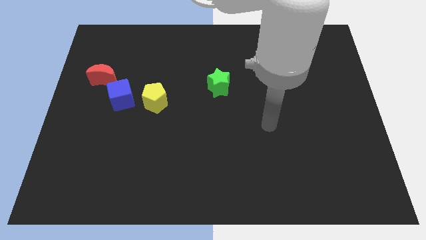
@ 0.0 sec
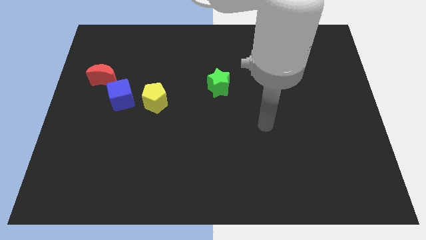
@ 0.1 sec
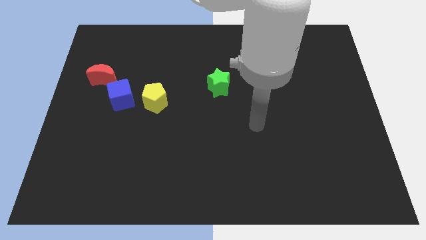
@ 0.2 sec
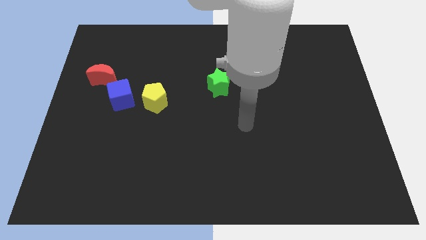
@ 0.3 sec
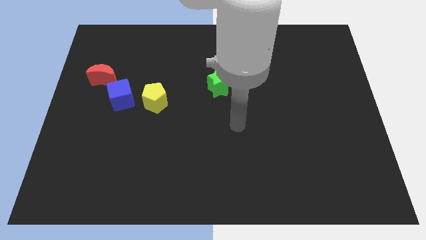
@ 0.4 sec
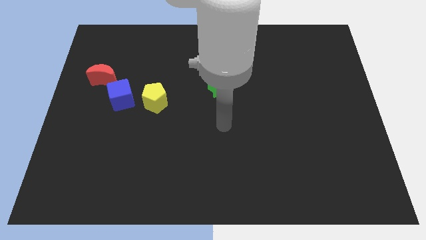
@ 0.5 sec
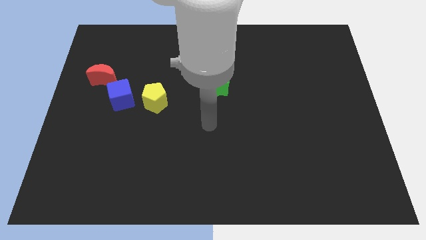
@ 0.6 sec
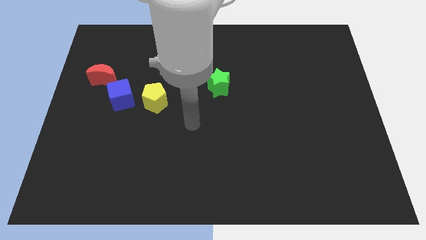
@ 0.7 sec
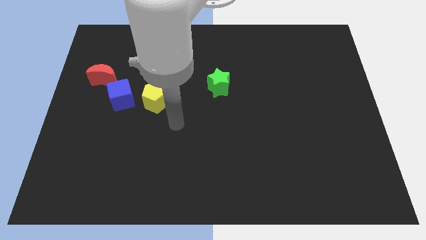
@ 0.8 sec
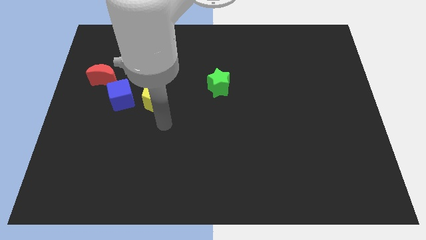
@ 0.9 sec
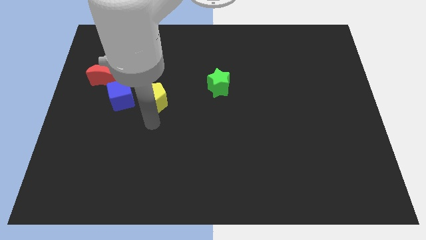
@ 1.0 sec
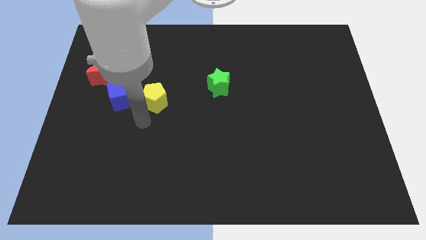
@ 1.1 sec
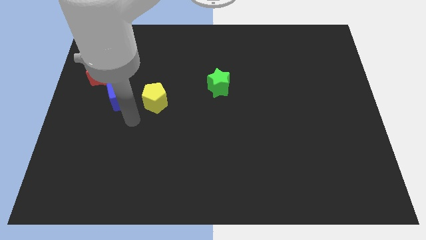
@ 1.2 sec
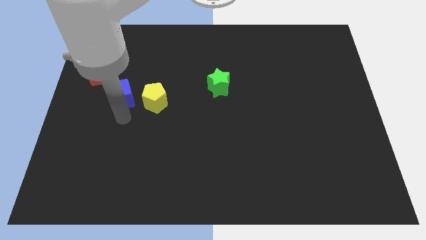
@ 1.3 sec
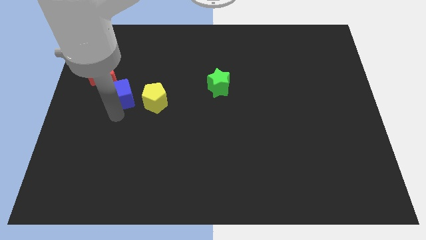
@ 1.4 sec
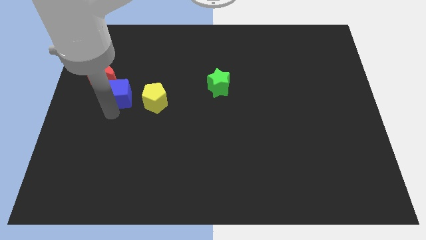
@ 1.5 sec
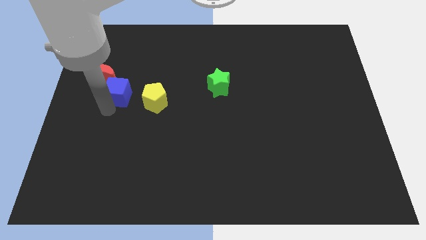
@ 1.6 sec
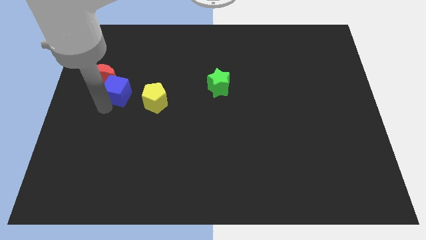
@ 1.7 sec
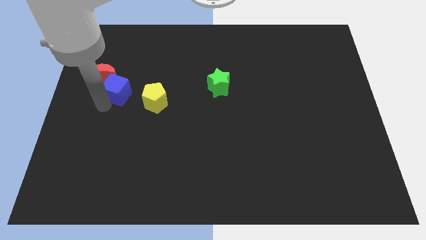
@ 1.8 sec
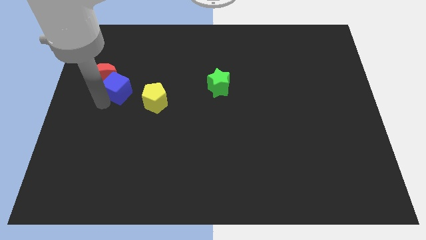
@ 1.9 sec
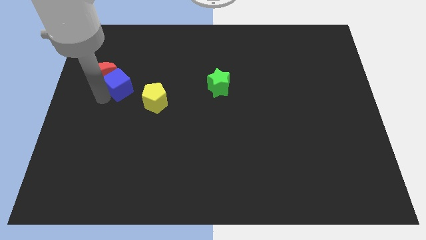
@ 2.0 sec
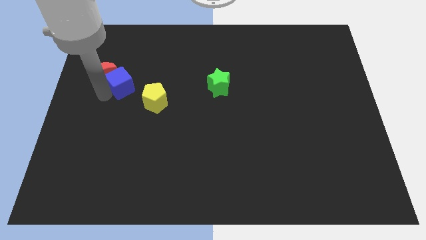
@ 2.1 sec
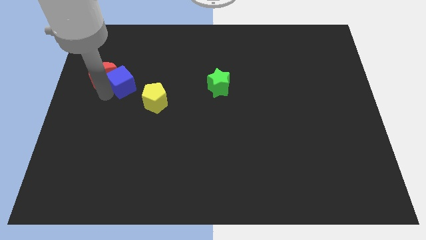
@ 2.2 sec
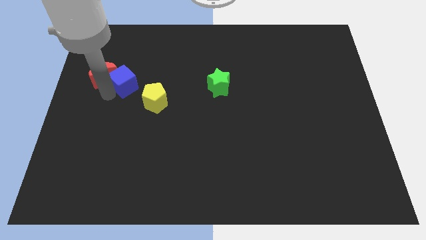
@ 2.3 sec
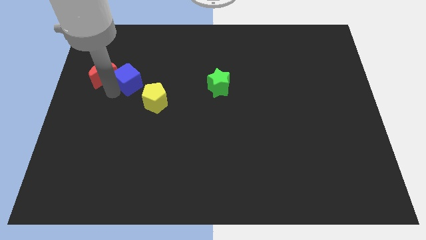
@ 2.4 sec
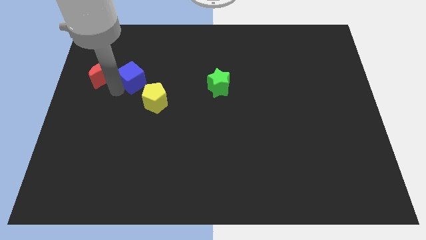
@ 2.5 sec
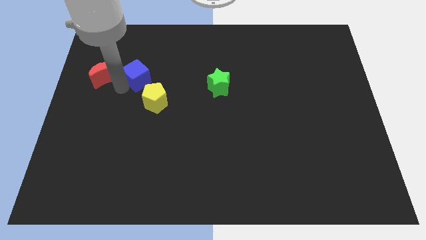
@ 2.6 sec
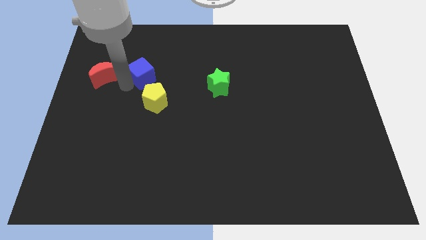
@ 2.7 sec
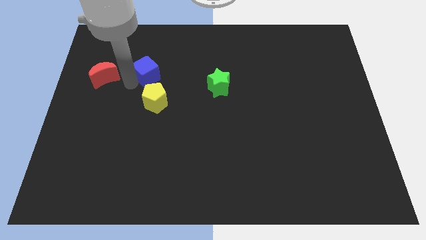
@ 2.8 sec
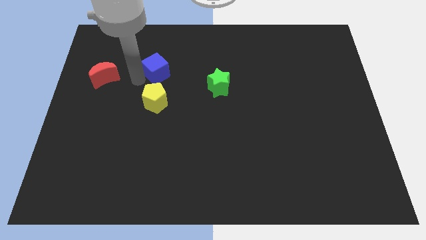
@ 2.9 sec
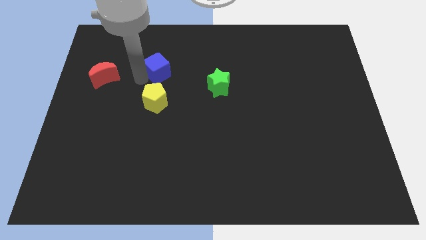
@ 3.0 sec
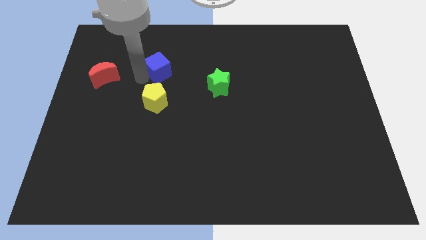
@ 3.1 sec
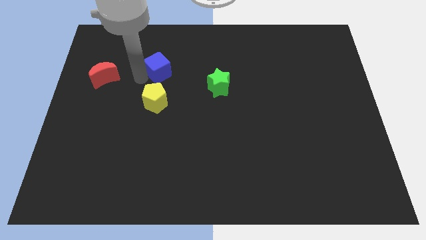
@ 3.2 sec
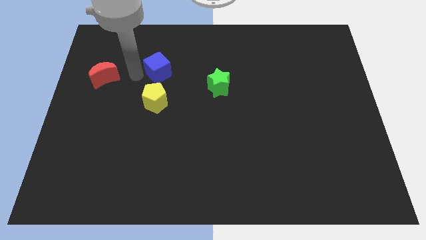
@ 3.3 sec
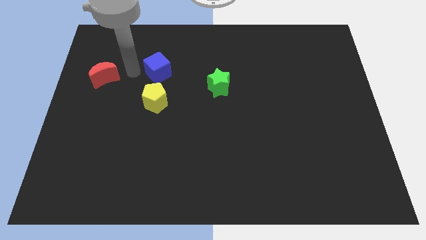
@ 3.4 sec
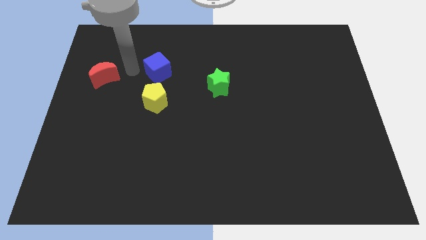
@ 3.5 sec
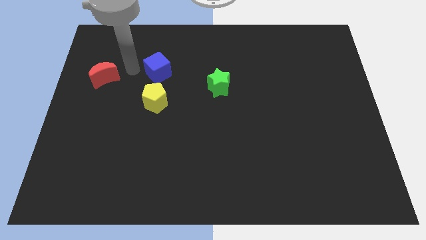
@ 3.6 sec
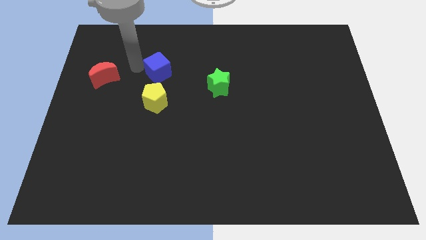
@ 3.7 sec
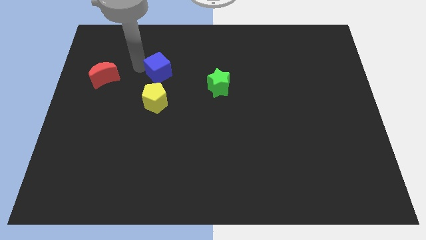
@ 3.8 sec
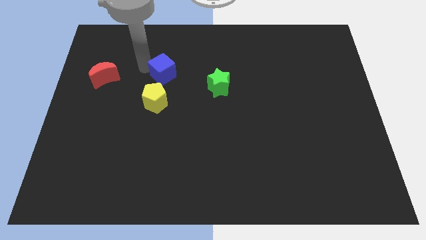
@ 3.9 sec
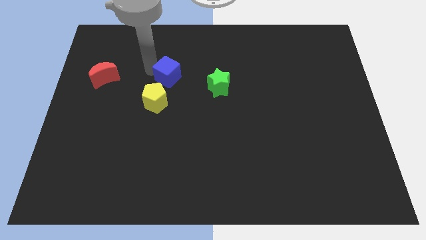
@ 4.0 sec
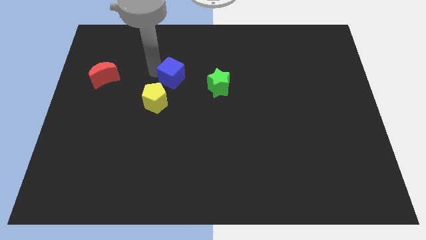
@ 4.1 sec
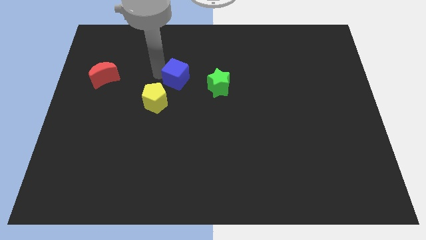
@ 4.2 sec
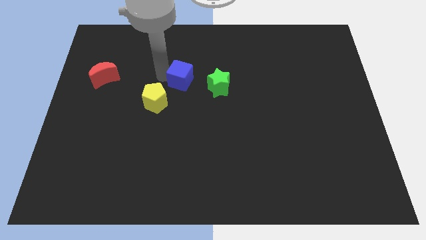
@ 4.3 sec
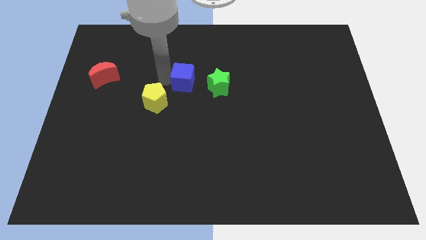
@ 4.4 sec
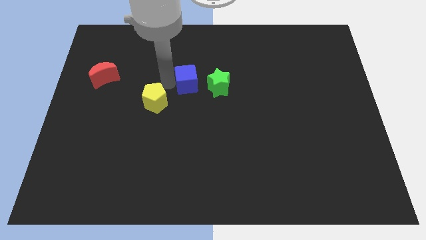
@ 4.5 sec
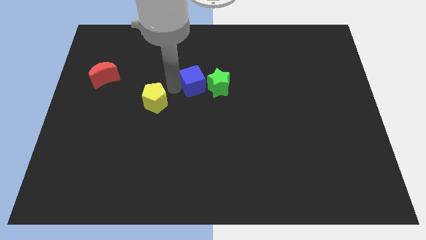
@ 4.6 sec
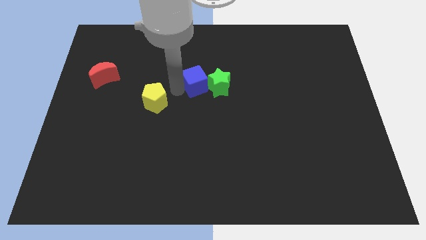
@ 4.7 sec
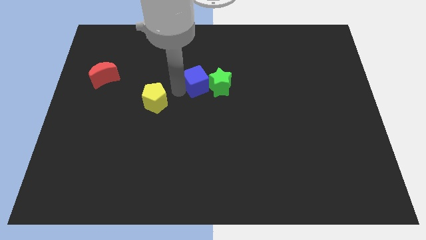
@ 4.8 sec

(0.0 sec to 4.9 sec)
move the blue block towards the star

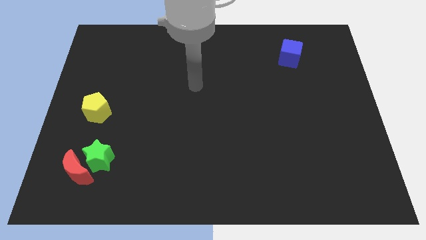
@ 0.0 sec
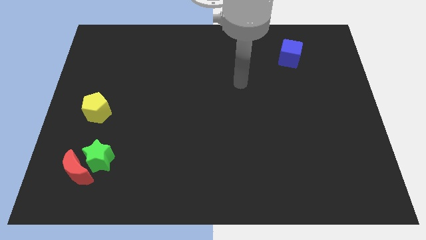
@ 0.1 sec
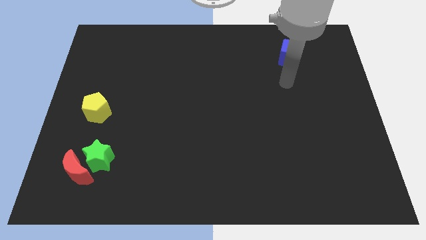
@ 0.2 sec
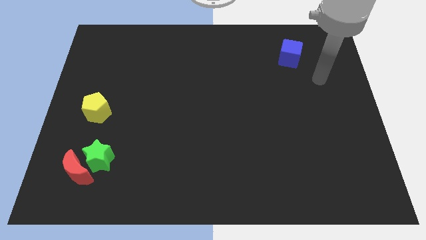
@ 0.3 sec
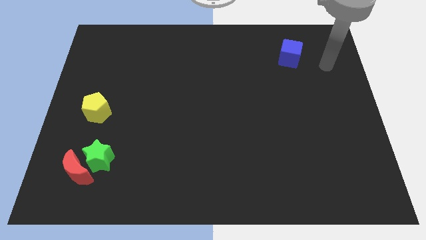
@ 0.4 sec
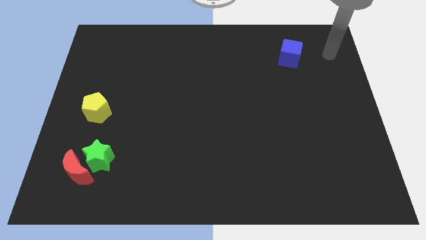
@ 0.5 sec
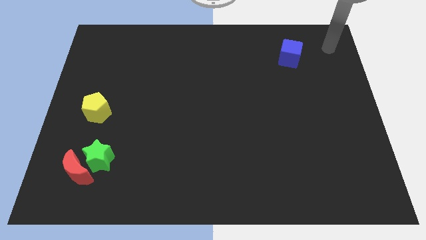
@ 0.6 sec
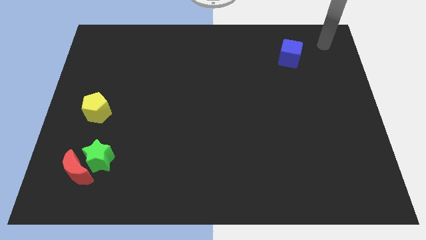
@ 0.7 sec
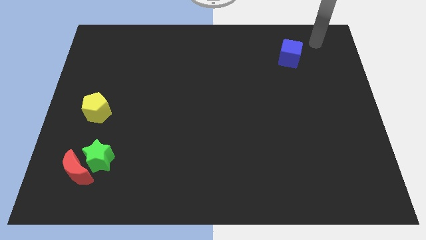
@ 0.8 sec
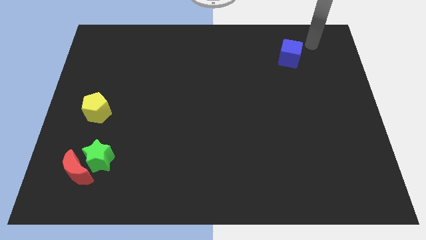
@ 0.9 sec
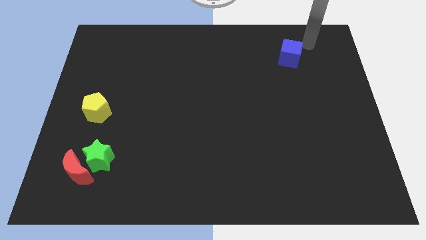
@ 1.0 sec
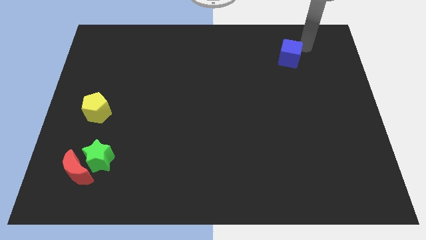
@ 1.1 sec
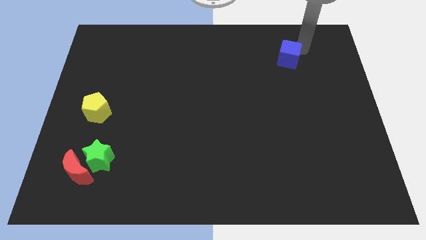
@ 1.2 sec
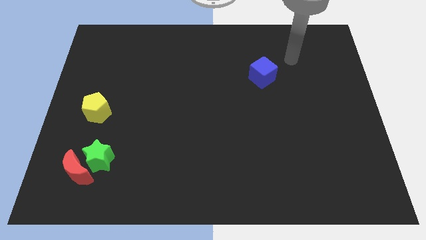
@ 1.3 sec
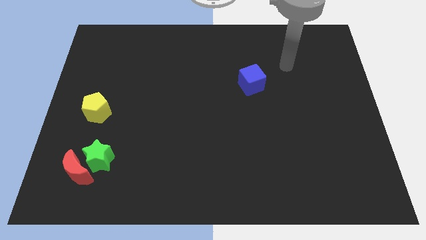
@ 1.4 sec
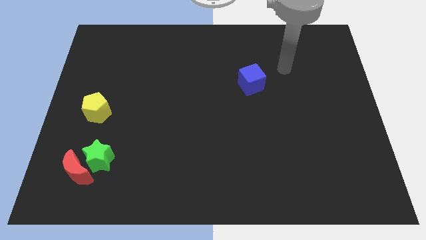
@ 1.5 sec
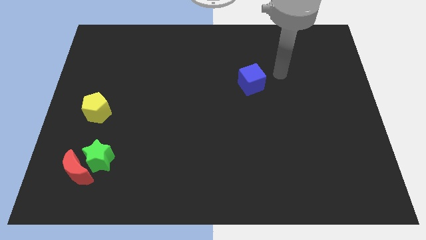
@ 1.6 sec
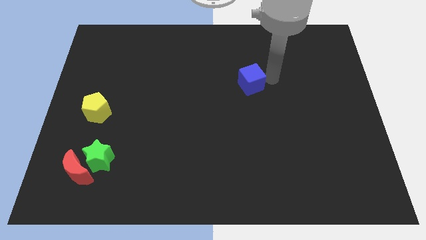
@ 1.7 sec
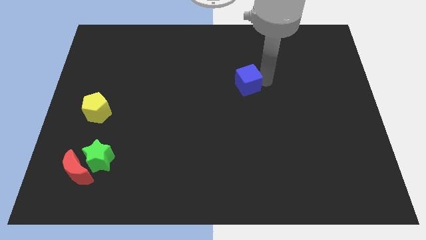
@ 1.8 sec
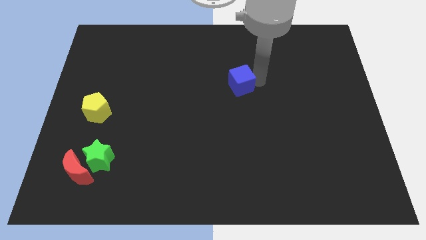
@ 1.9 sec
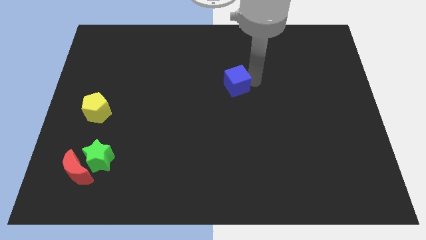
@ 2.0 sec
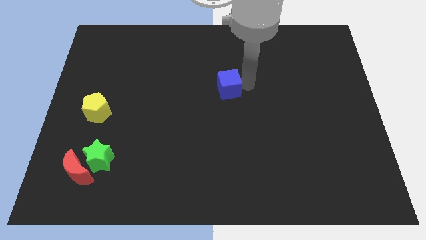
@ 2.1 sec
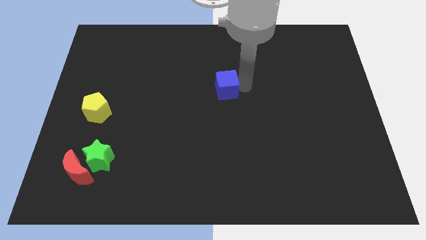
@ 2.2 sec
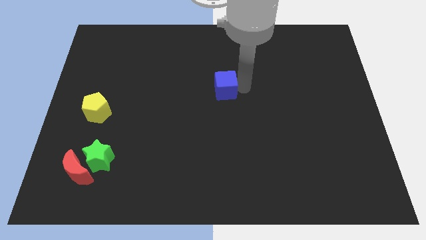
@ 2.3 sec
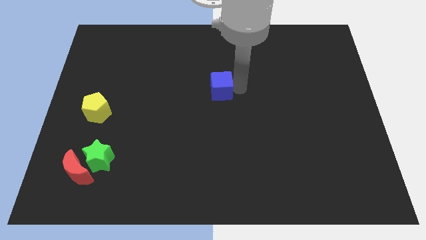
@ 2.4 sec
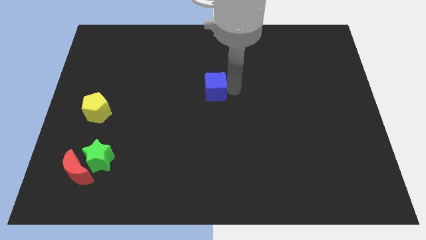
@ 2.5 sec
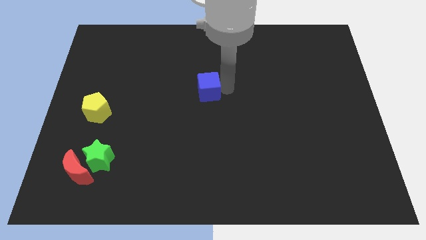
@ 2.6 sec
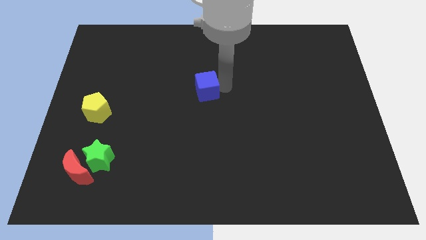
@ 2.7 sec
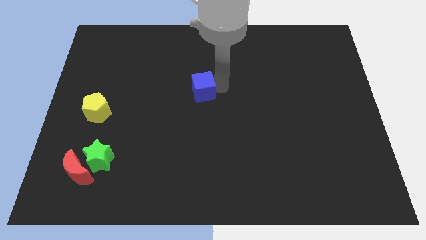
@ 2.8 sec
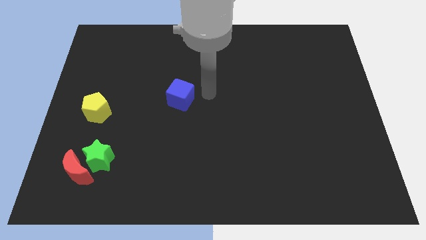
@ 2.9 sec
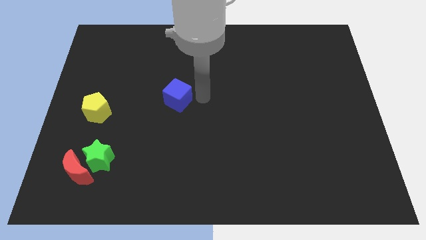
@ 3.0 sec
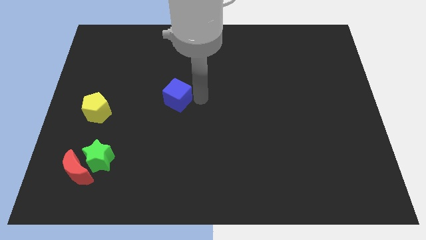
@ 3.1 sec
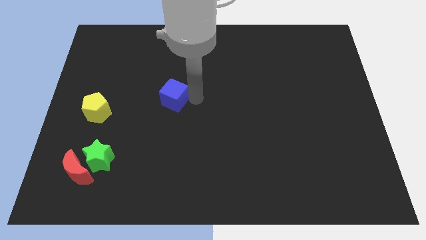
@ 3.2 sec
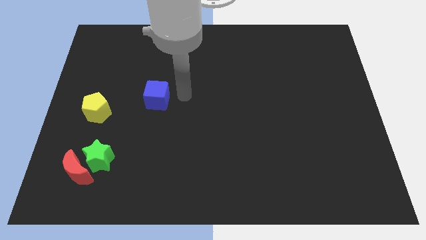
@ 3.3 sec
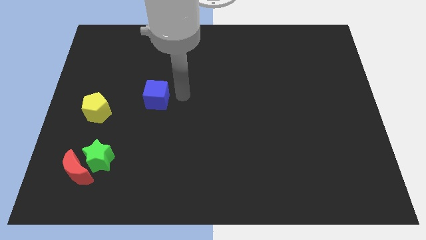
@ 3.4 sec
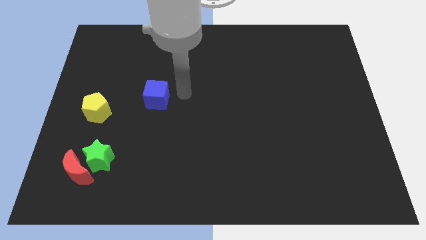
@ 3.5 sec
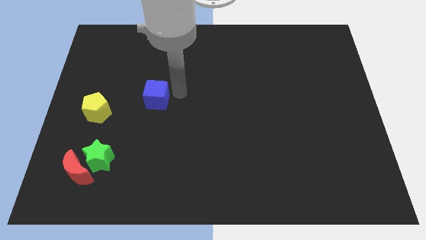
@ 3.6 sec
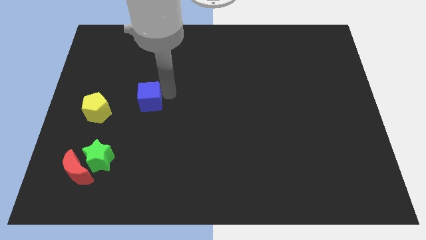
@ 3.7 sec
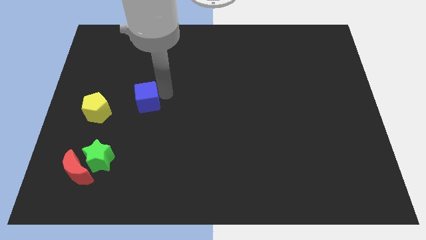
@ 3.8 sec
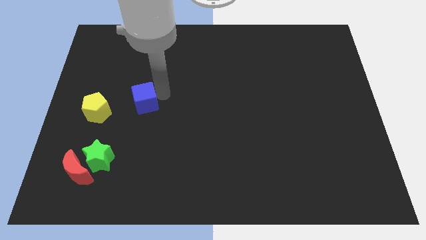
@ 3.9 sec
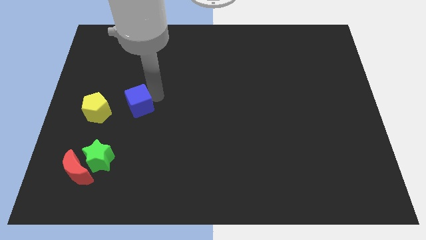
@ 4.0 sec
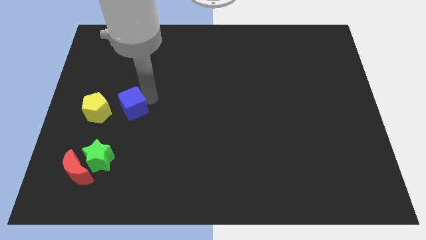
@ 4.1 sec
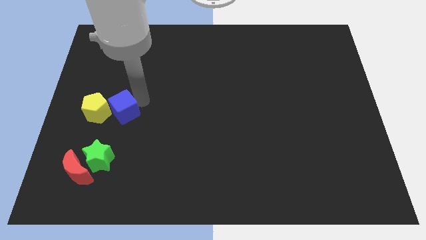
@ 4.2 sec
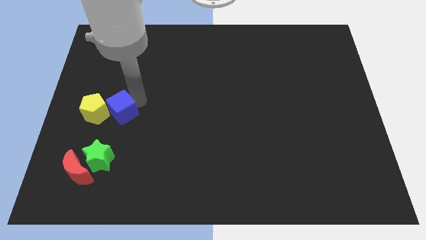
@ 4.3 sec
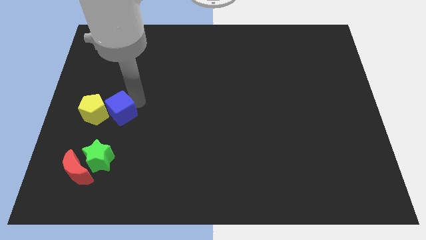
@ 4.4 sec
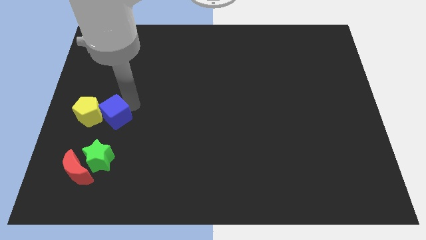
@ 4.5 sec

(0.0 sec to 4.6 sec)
move the blue cube next to the pentagon
